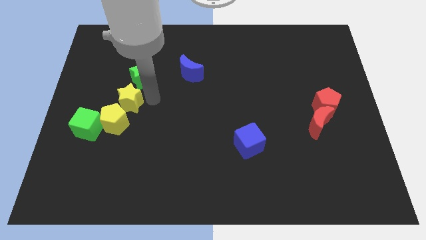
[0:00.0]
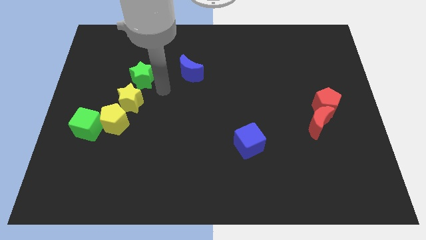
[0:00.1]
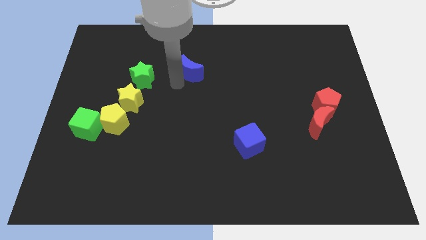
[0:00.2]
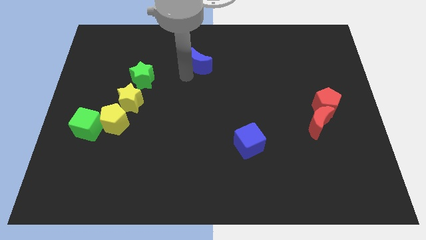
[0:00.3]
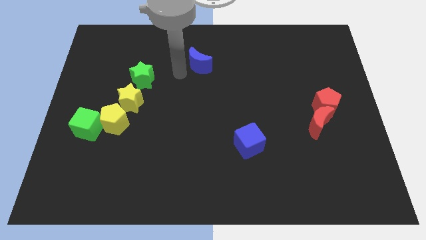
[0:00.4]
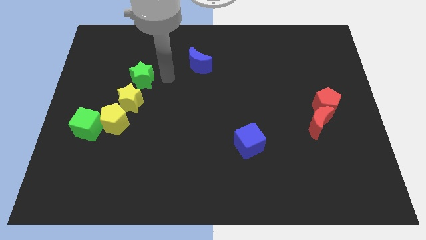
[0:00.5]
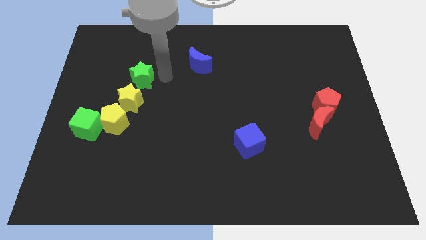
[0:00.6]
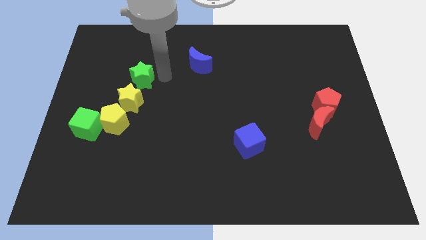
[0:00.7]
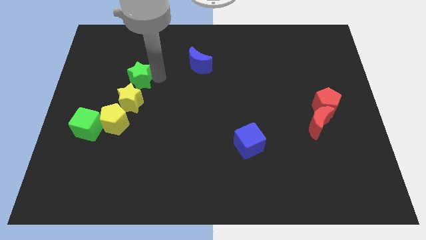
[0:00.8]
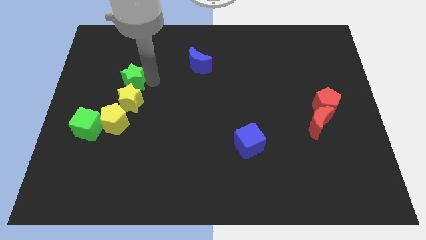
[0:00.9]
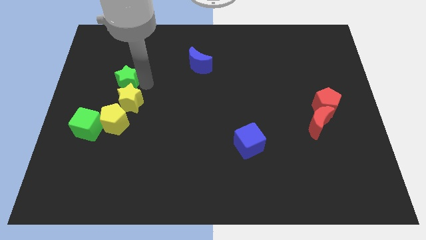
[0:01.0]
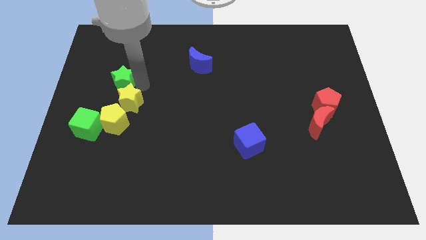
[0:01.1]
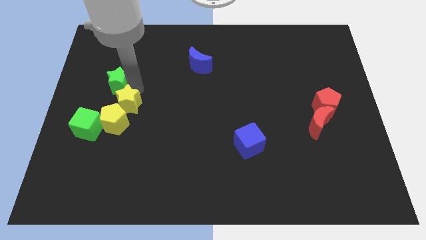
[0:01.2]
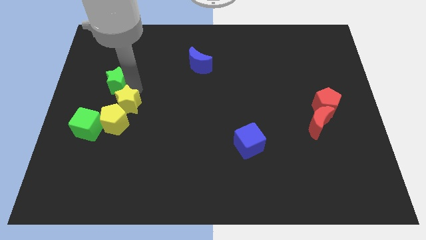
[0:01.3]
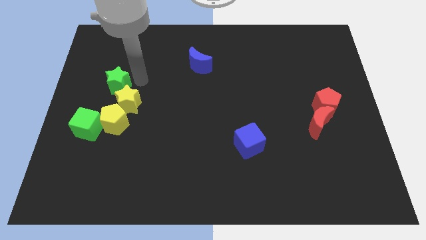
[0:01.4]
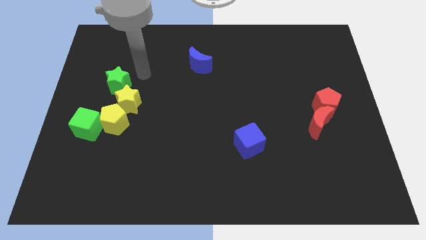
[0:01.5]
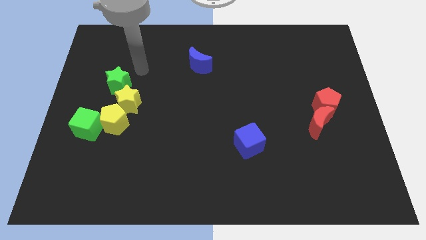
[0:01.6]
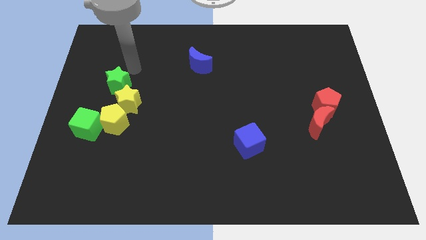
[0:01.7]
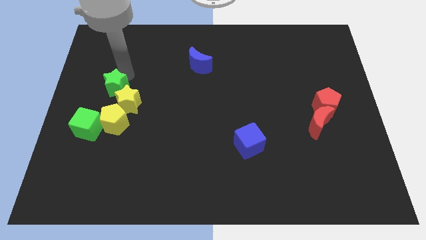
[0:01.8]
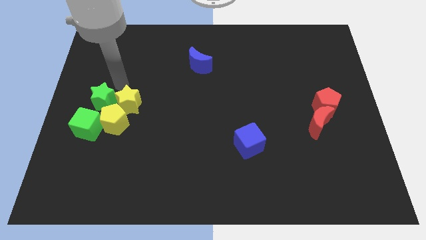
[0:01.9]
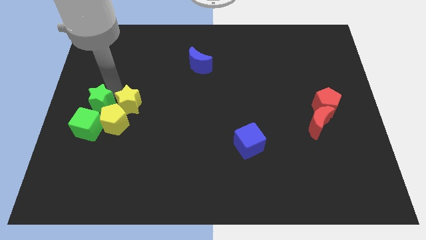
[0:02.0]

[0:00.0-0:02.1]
push green star to the left of yellow star

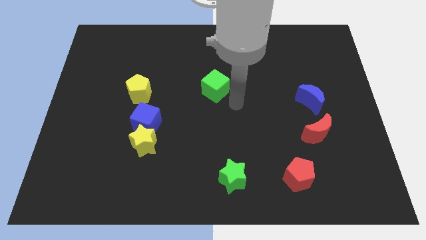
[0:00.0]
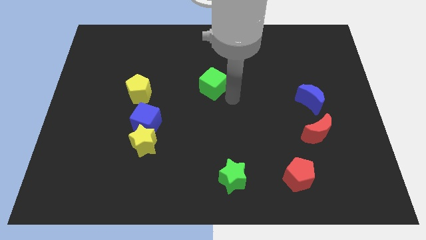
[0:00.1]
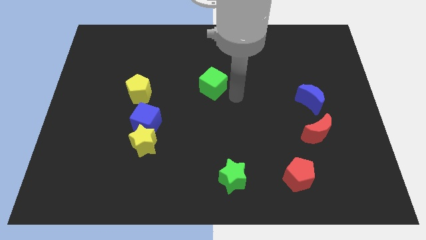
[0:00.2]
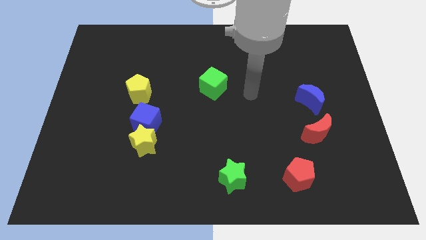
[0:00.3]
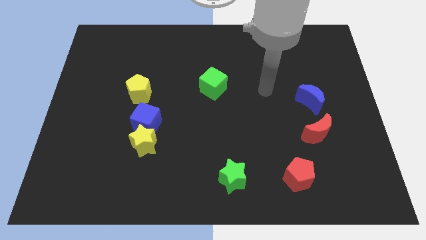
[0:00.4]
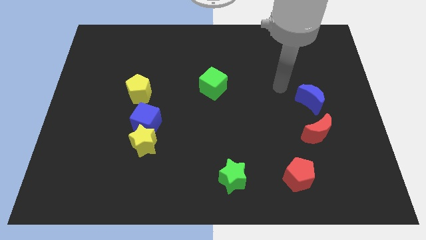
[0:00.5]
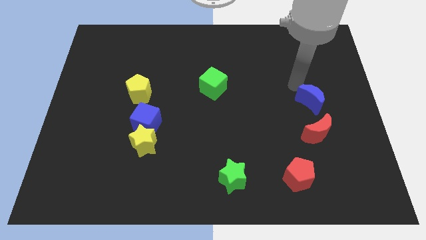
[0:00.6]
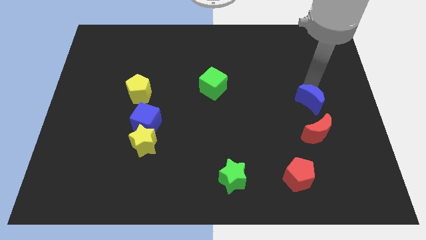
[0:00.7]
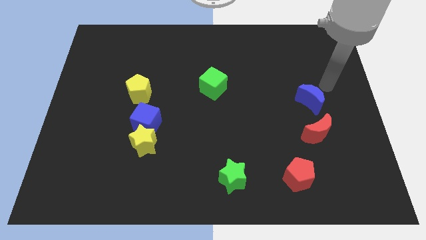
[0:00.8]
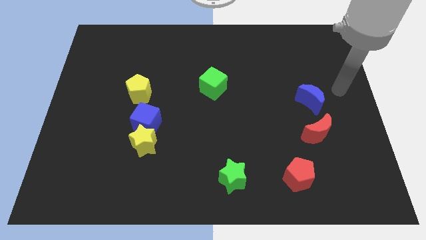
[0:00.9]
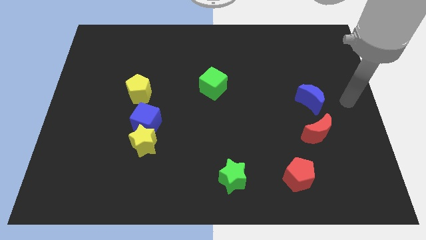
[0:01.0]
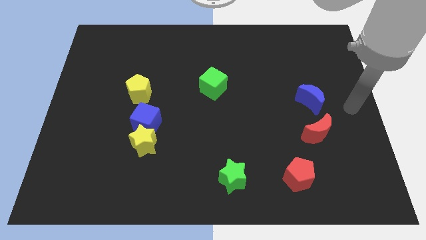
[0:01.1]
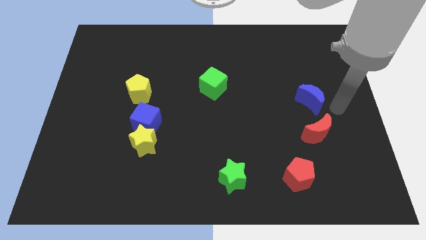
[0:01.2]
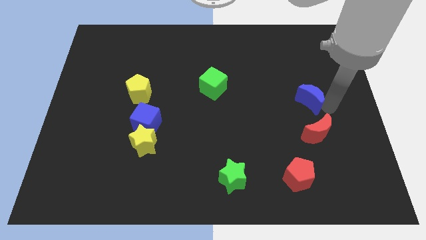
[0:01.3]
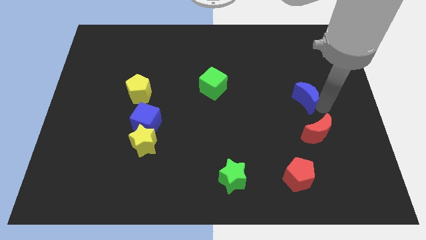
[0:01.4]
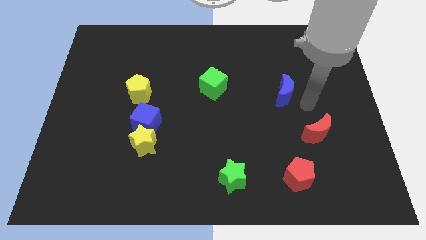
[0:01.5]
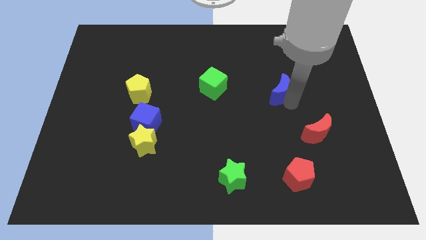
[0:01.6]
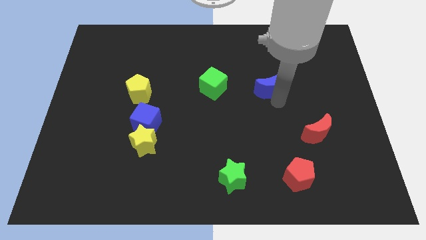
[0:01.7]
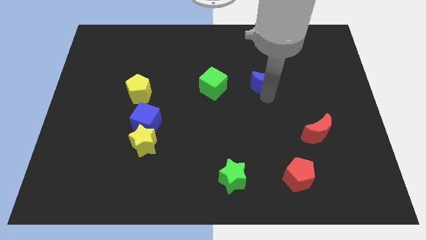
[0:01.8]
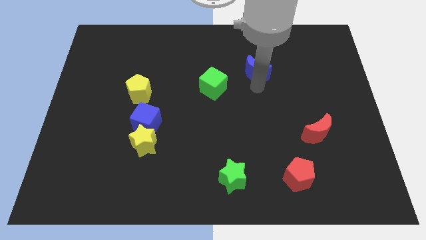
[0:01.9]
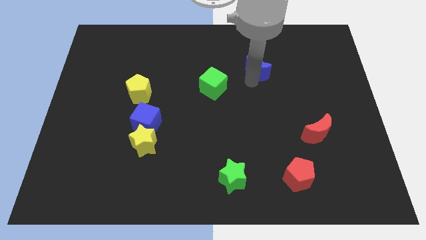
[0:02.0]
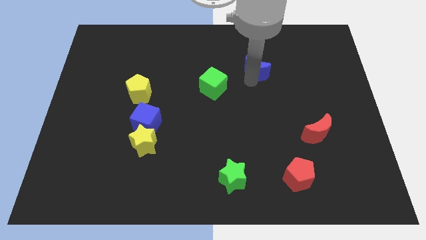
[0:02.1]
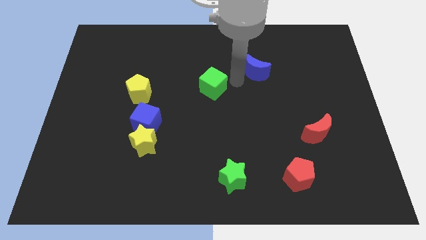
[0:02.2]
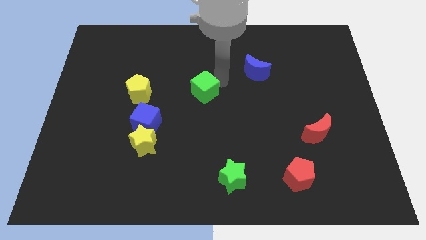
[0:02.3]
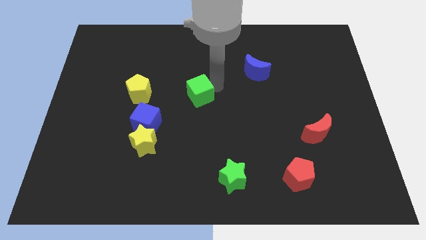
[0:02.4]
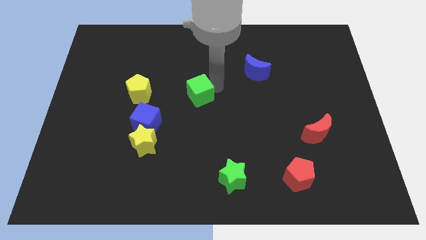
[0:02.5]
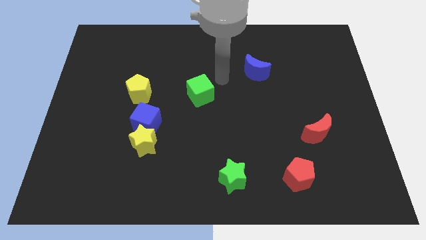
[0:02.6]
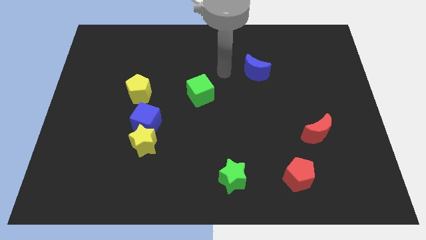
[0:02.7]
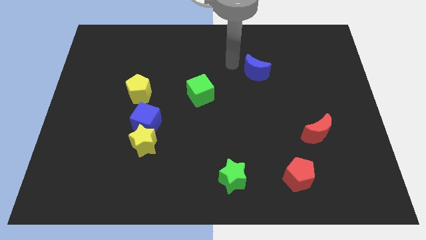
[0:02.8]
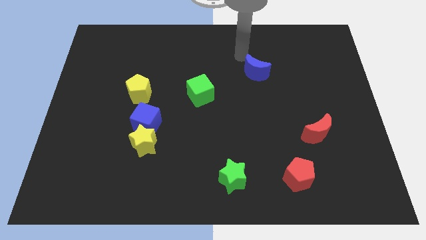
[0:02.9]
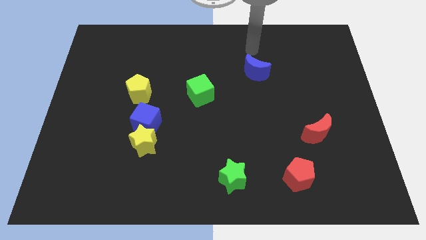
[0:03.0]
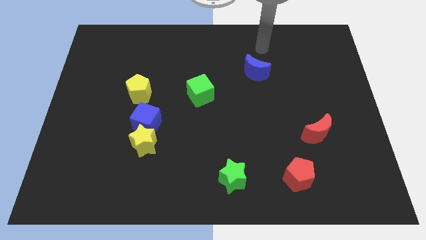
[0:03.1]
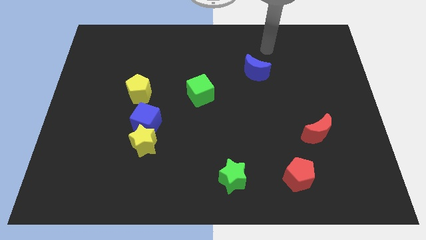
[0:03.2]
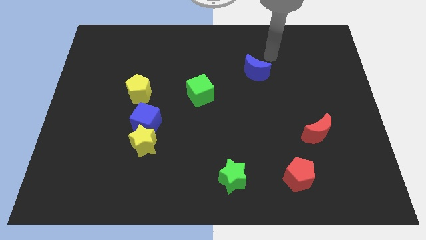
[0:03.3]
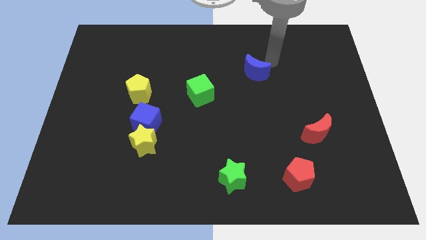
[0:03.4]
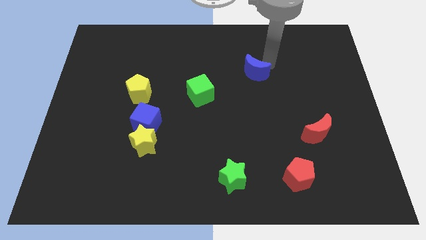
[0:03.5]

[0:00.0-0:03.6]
place the green cube diagonal to the blue moon

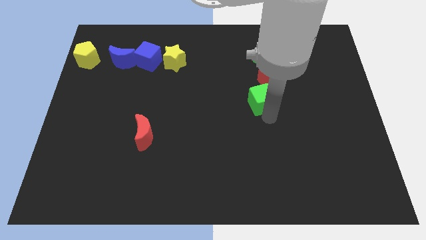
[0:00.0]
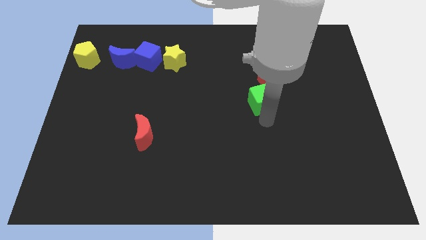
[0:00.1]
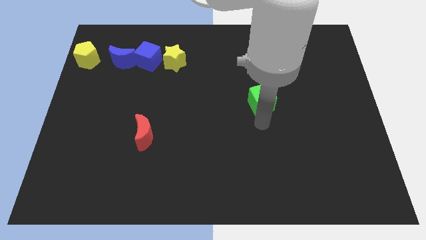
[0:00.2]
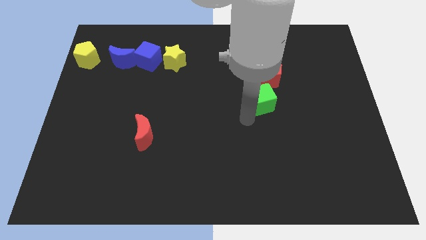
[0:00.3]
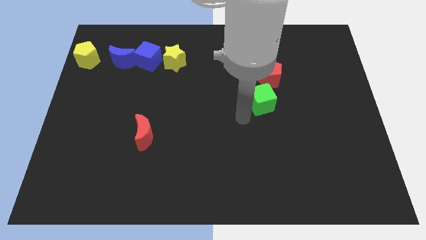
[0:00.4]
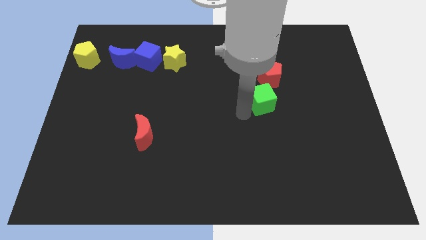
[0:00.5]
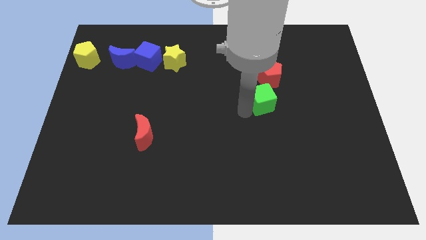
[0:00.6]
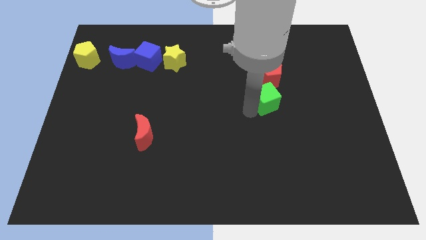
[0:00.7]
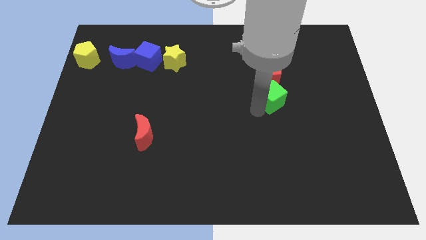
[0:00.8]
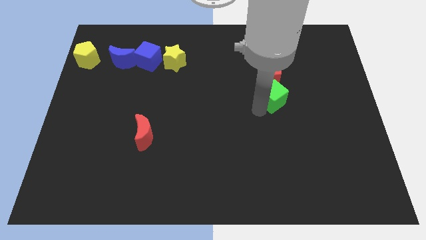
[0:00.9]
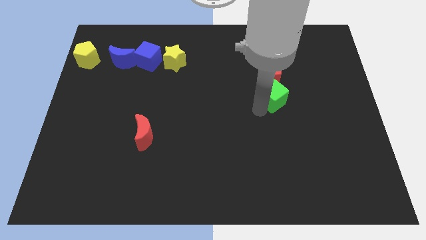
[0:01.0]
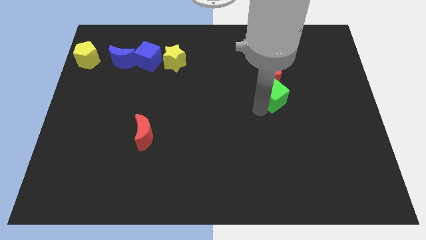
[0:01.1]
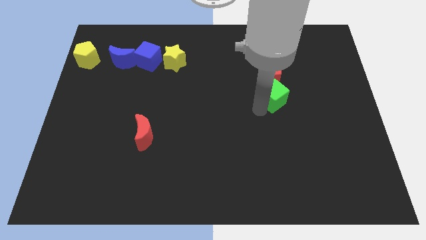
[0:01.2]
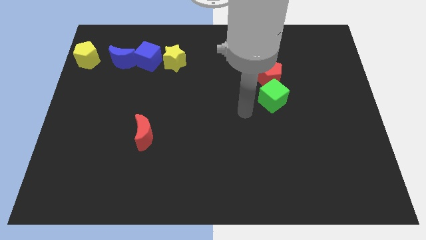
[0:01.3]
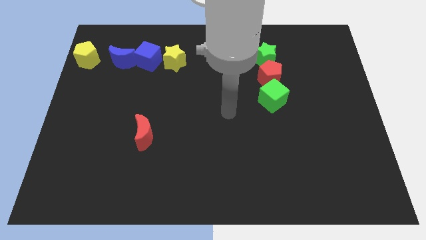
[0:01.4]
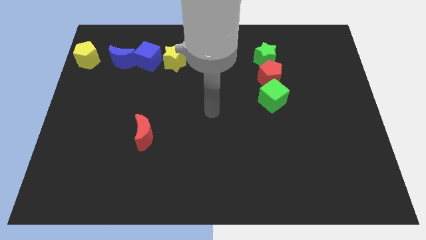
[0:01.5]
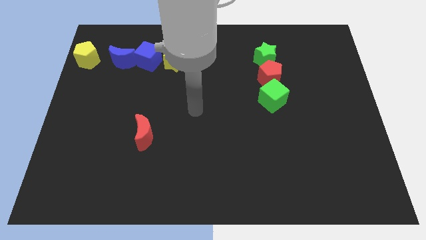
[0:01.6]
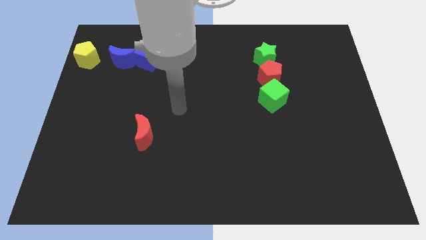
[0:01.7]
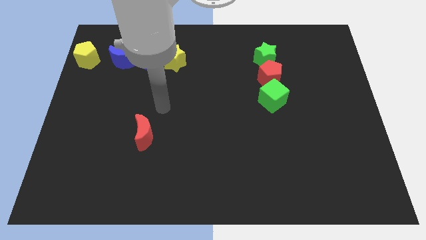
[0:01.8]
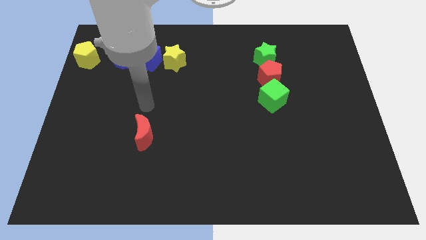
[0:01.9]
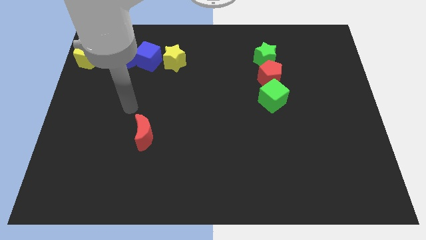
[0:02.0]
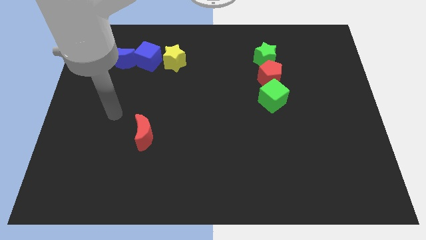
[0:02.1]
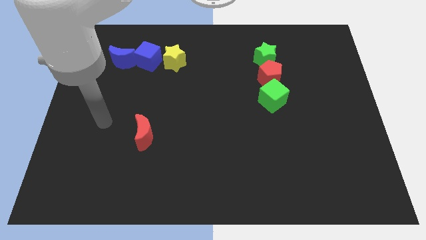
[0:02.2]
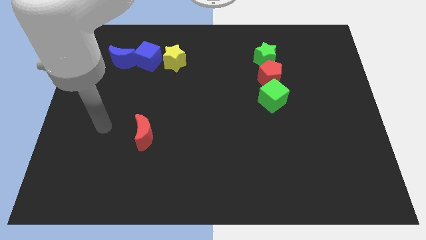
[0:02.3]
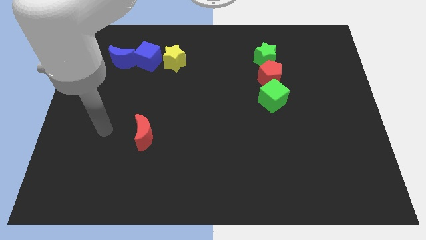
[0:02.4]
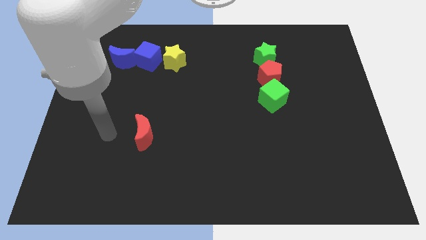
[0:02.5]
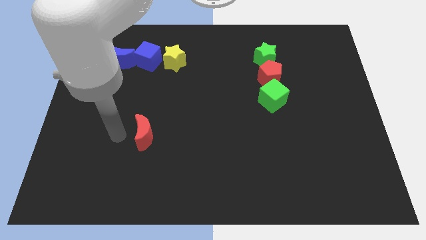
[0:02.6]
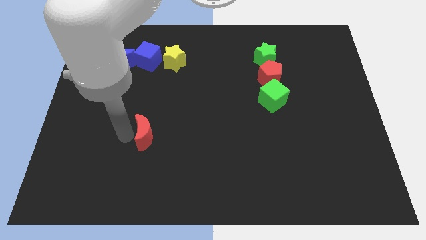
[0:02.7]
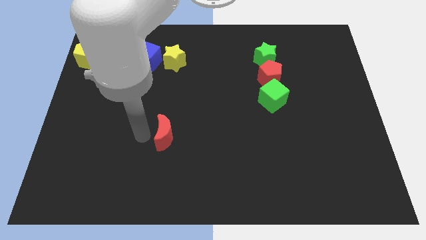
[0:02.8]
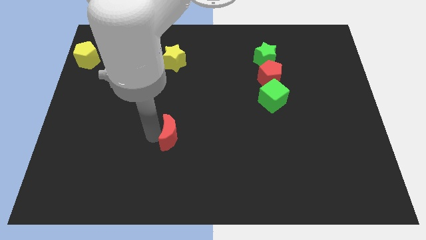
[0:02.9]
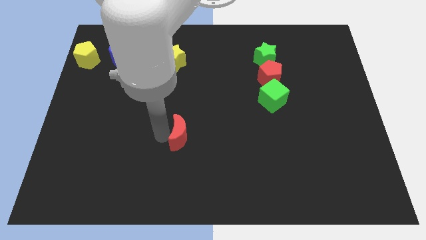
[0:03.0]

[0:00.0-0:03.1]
push red crescent below yellow star

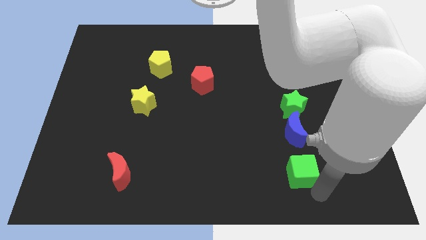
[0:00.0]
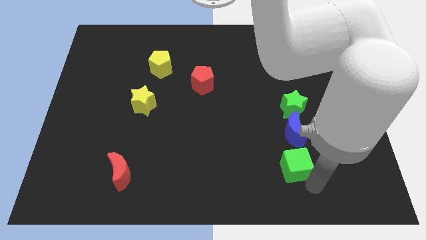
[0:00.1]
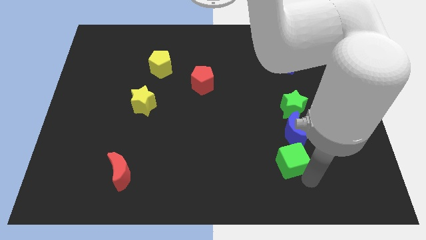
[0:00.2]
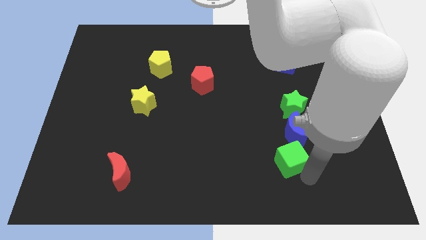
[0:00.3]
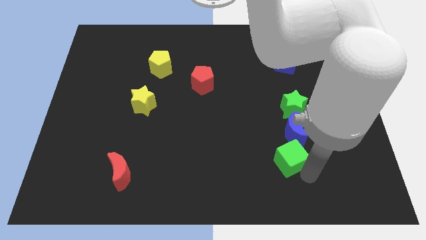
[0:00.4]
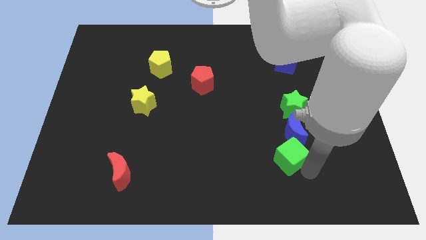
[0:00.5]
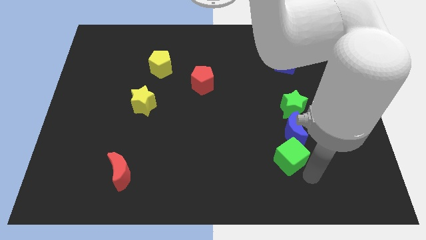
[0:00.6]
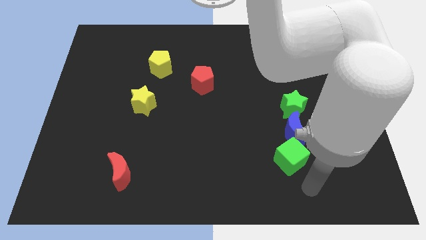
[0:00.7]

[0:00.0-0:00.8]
move the green cube towards the blue moon
